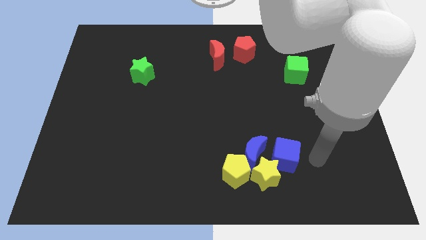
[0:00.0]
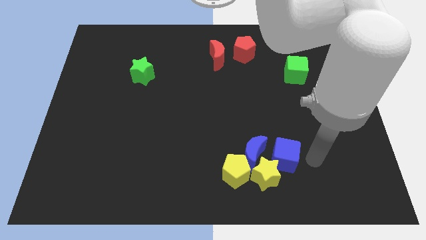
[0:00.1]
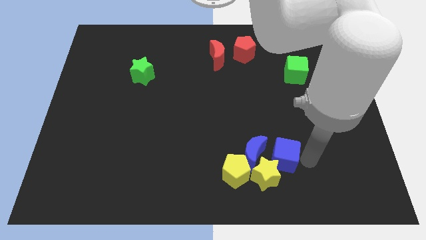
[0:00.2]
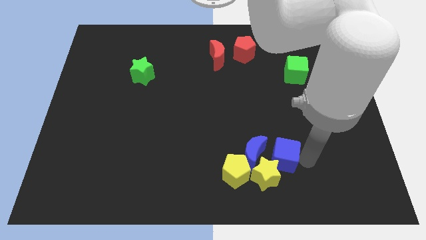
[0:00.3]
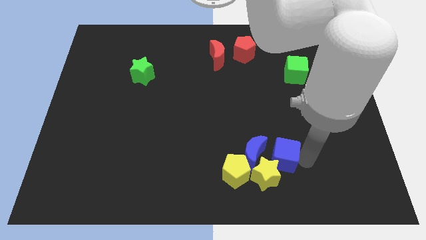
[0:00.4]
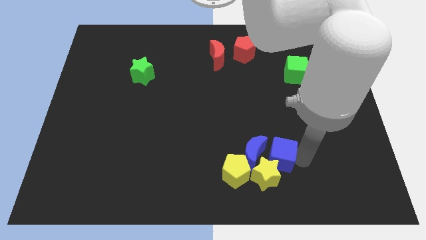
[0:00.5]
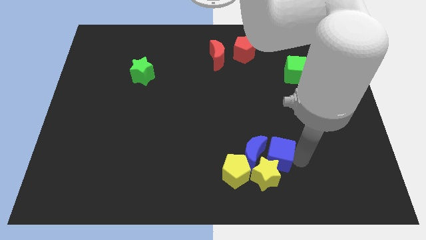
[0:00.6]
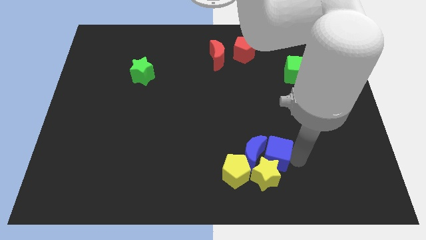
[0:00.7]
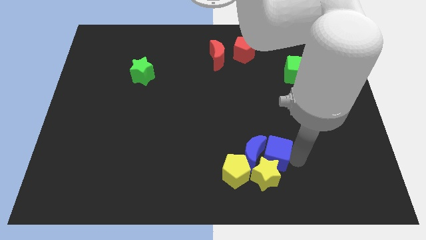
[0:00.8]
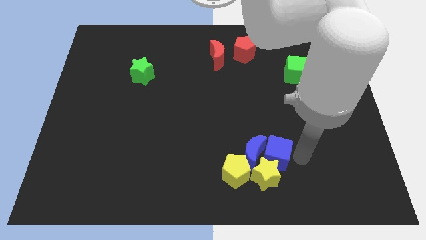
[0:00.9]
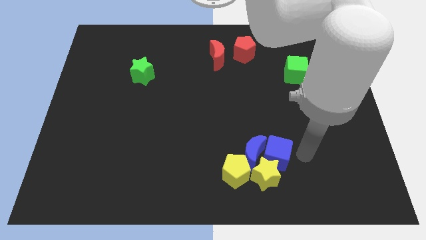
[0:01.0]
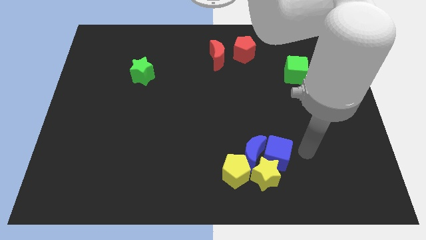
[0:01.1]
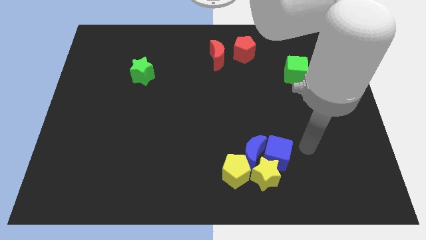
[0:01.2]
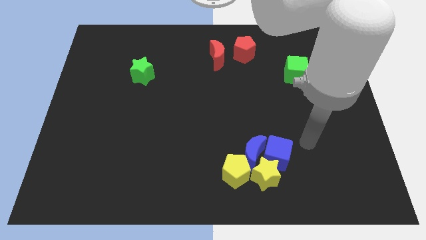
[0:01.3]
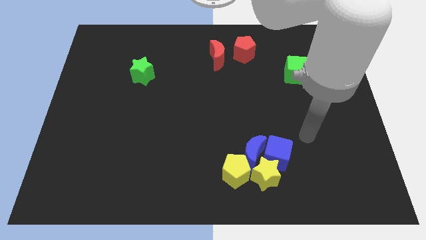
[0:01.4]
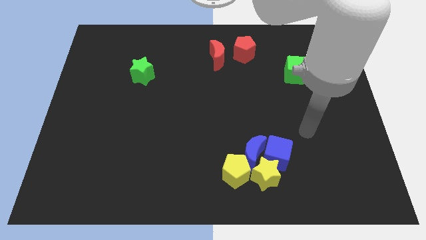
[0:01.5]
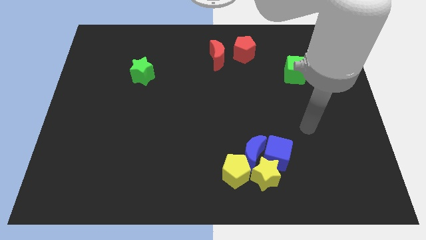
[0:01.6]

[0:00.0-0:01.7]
move the blue cube to the right of the blue crescent

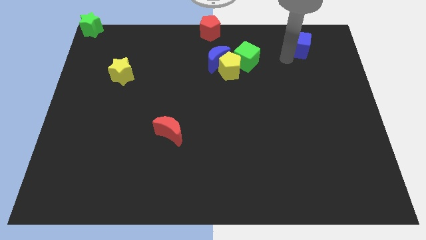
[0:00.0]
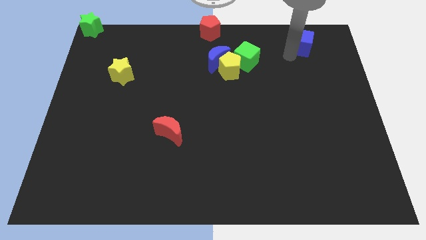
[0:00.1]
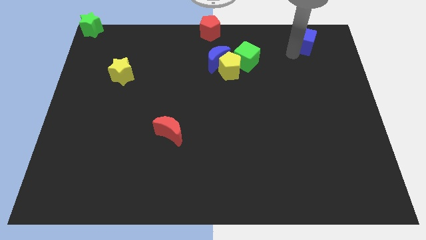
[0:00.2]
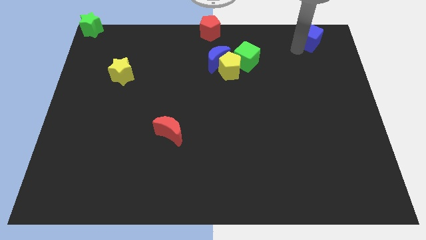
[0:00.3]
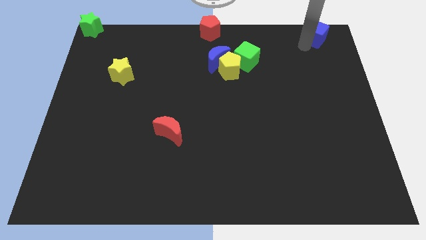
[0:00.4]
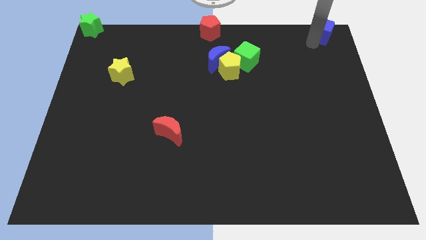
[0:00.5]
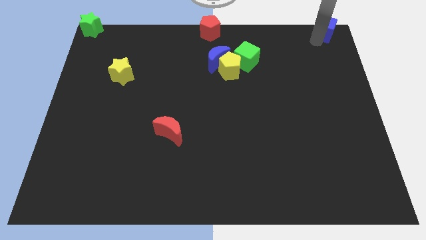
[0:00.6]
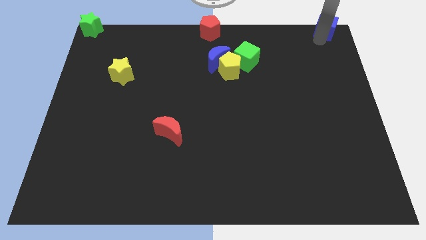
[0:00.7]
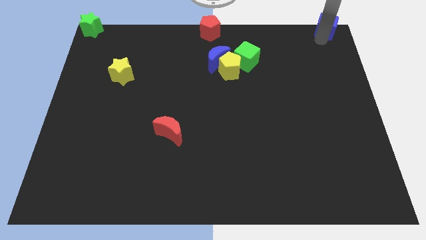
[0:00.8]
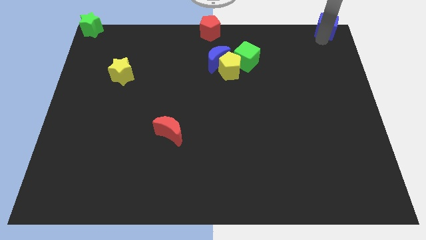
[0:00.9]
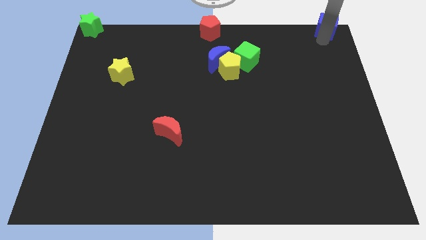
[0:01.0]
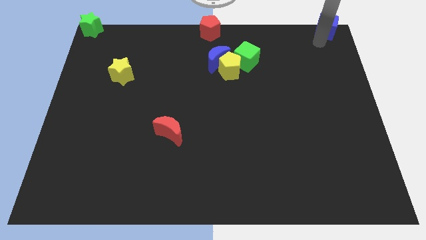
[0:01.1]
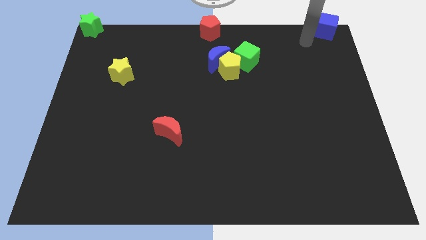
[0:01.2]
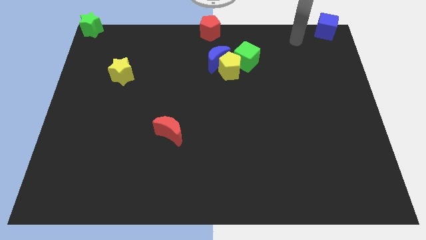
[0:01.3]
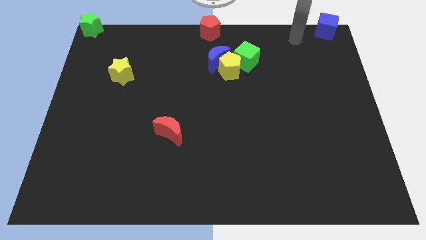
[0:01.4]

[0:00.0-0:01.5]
move the blue cube to the top right corner of the board

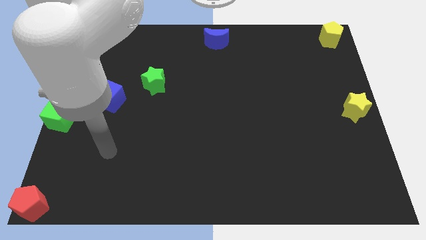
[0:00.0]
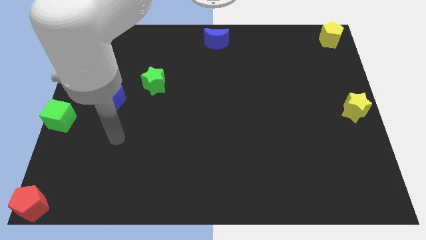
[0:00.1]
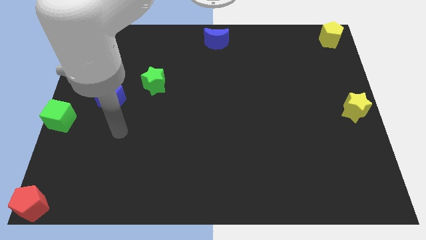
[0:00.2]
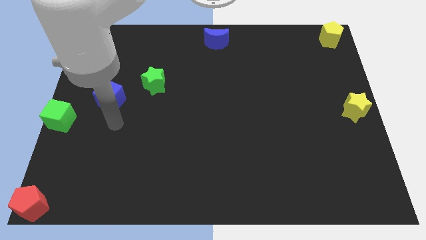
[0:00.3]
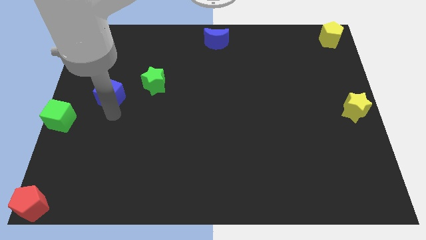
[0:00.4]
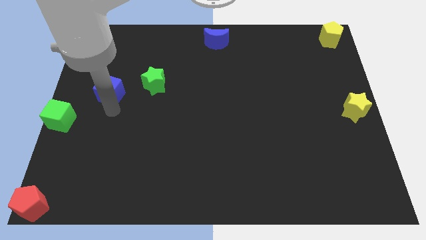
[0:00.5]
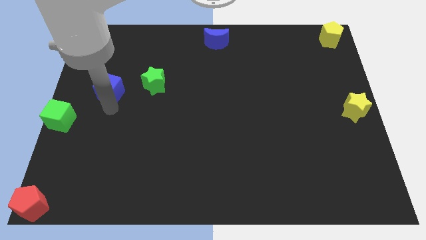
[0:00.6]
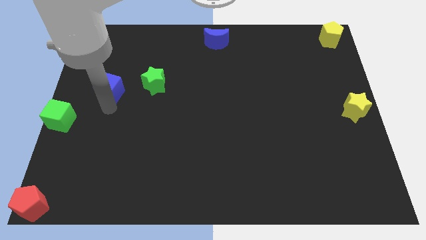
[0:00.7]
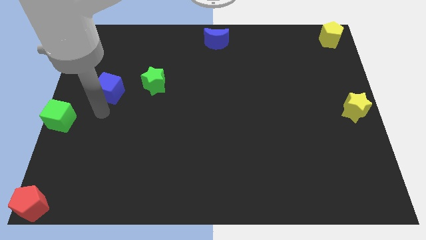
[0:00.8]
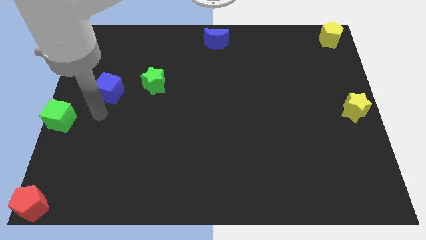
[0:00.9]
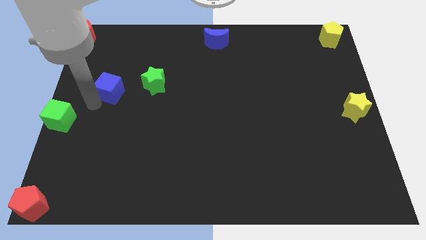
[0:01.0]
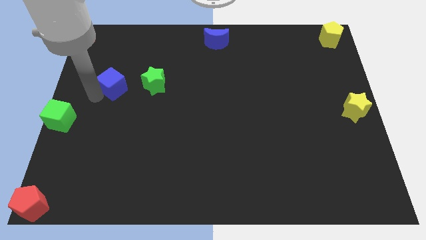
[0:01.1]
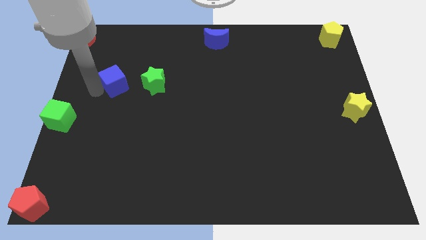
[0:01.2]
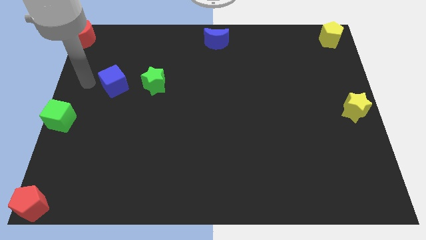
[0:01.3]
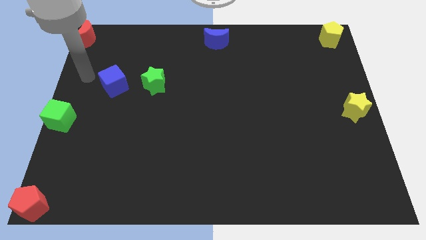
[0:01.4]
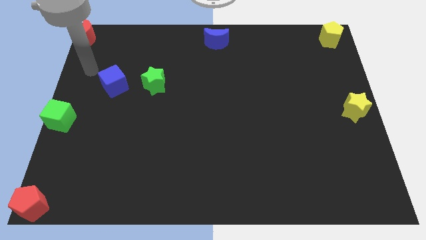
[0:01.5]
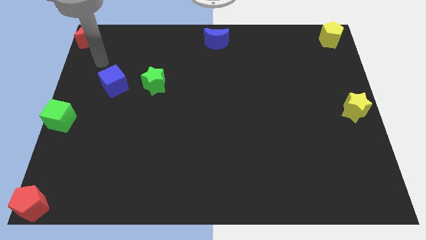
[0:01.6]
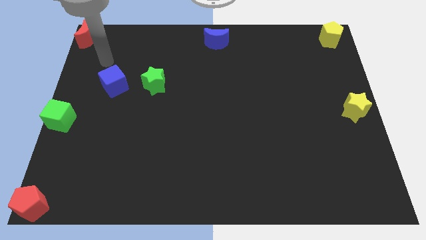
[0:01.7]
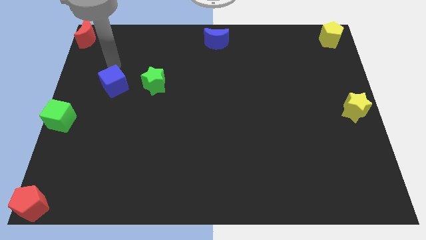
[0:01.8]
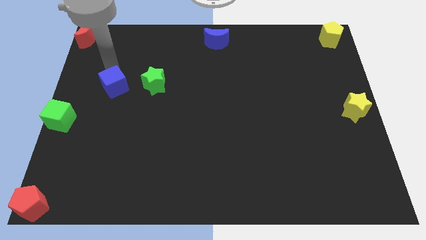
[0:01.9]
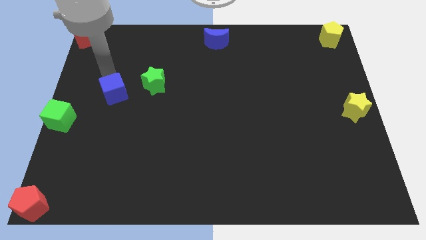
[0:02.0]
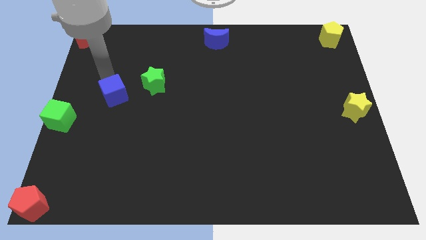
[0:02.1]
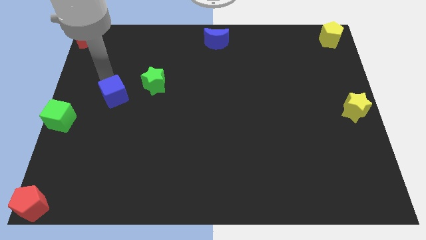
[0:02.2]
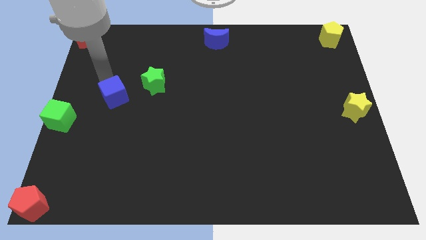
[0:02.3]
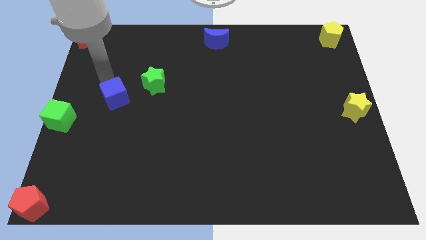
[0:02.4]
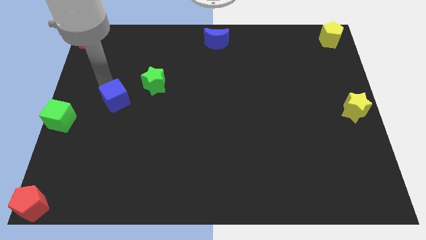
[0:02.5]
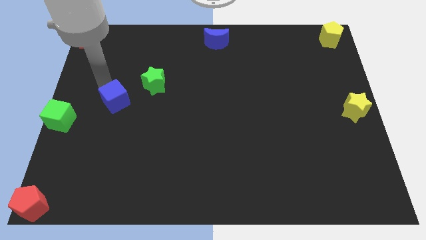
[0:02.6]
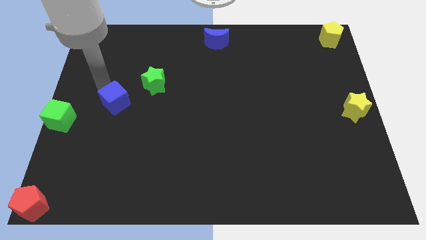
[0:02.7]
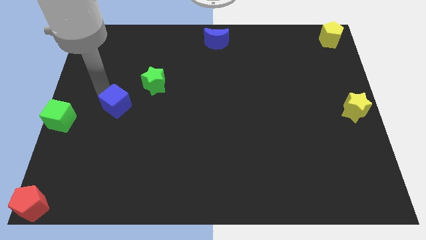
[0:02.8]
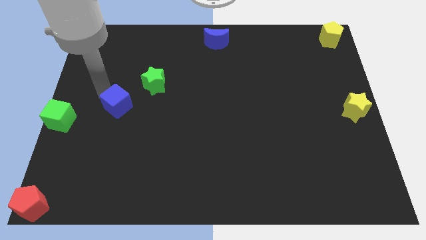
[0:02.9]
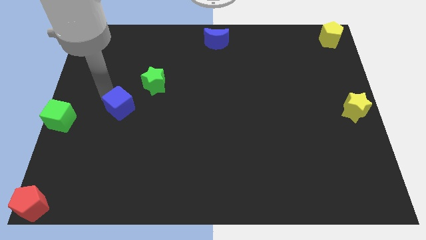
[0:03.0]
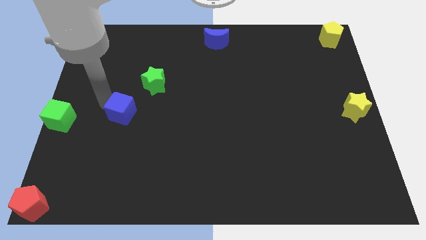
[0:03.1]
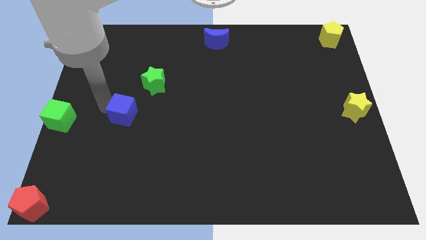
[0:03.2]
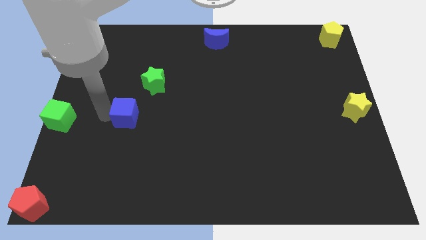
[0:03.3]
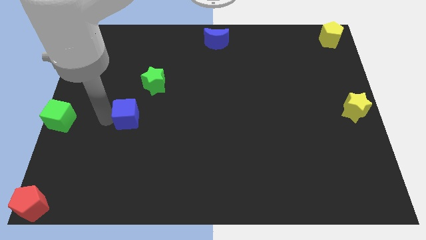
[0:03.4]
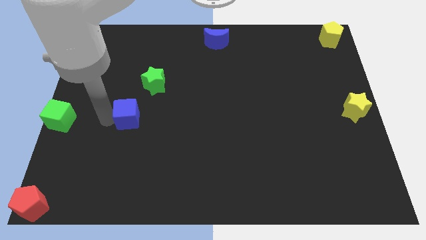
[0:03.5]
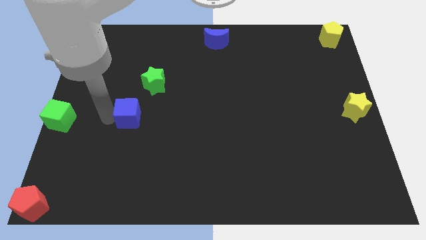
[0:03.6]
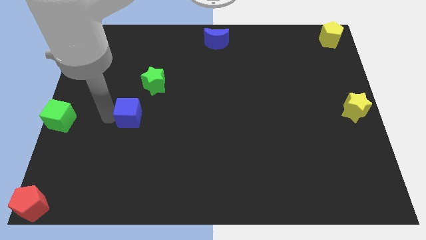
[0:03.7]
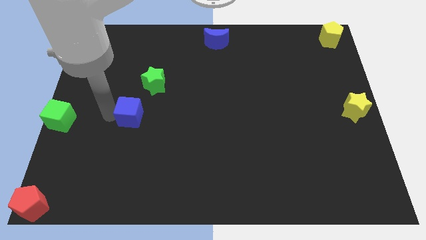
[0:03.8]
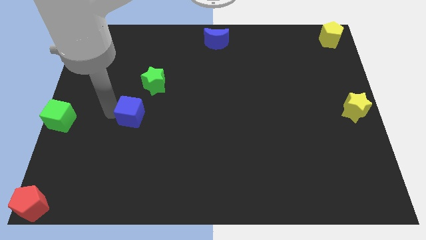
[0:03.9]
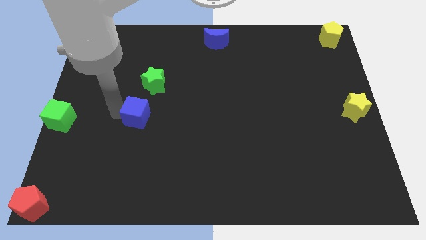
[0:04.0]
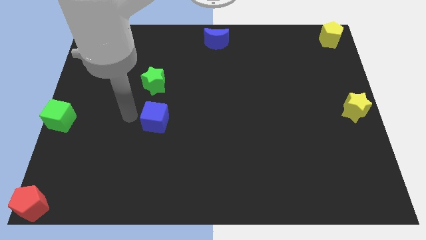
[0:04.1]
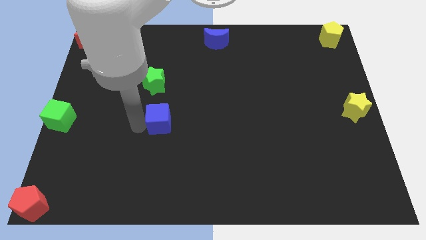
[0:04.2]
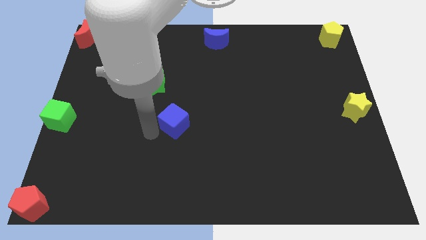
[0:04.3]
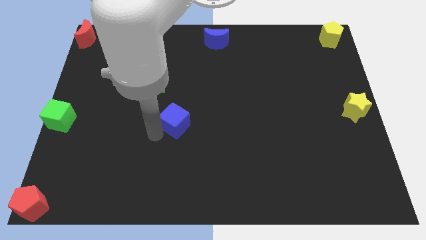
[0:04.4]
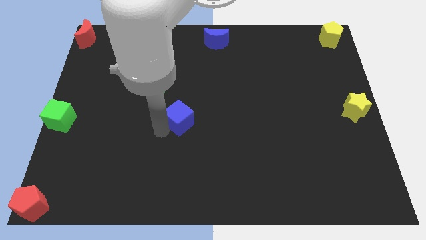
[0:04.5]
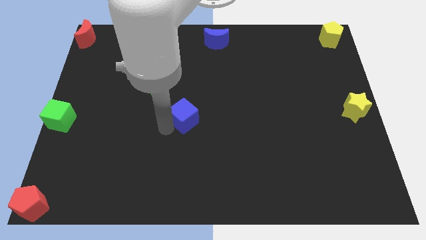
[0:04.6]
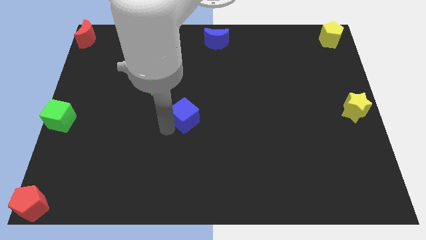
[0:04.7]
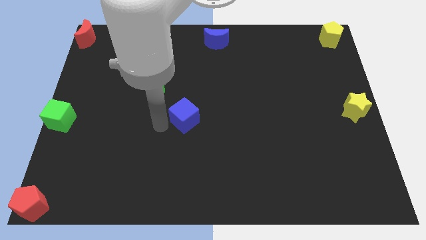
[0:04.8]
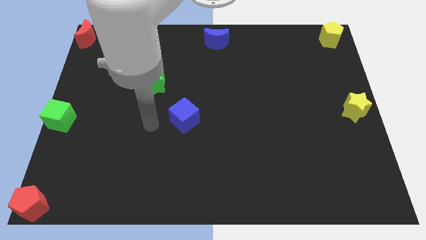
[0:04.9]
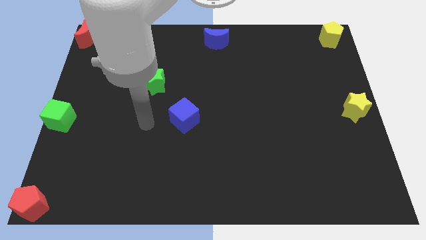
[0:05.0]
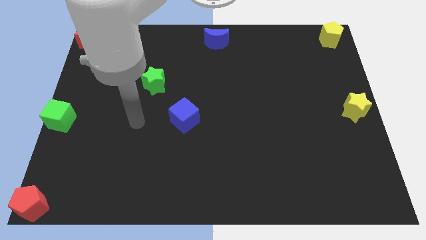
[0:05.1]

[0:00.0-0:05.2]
place the blue cube diagonally to the right side of the green star

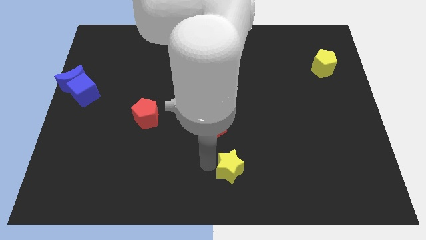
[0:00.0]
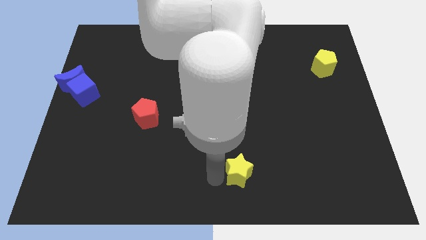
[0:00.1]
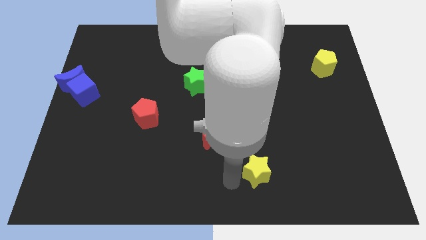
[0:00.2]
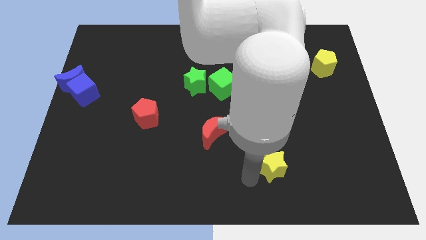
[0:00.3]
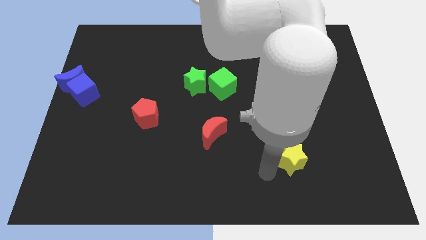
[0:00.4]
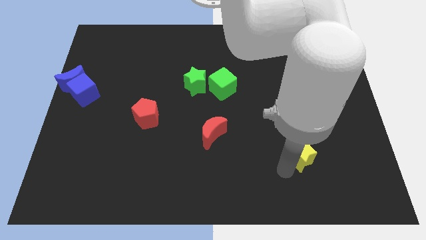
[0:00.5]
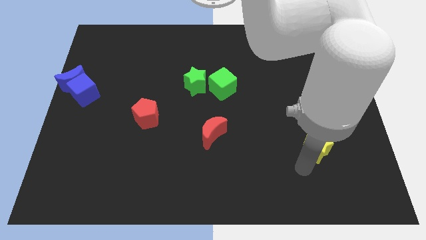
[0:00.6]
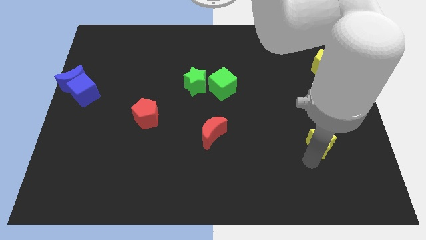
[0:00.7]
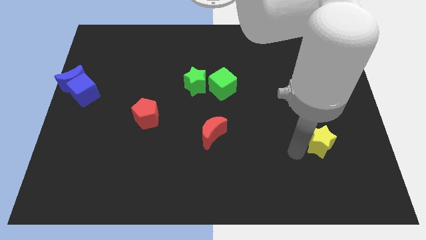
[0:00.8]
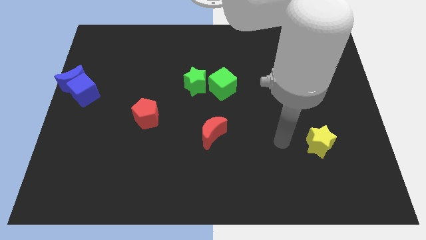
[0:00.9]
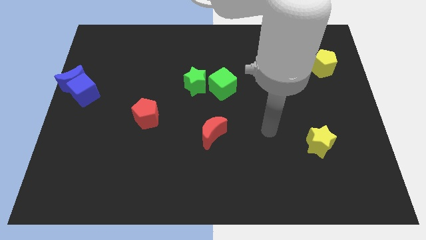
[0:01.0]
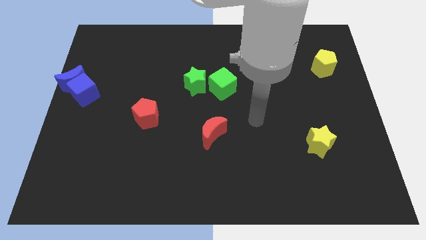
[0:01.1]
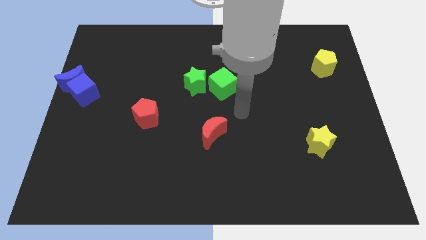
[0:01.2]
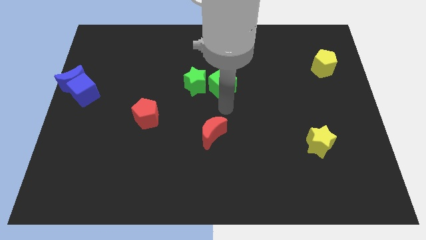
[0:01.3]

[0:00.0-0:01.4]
place yellow star diagonally below yellow pentagon
